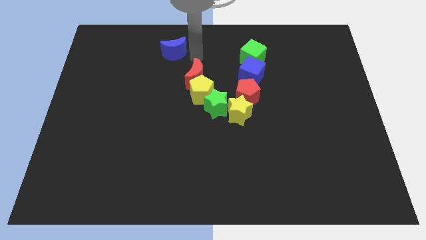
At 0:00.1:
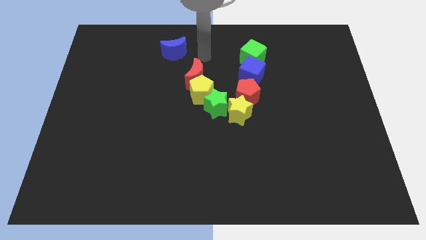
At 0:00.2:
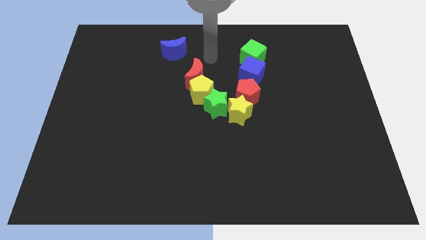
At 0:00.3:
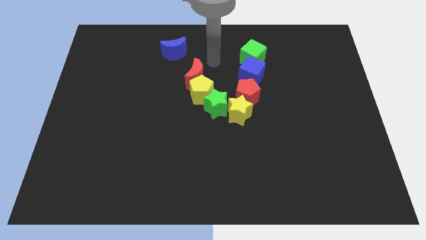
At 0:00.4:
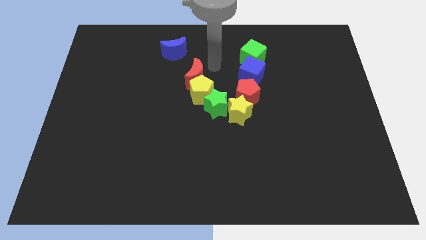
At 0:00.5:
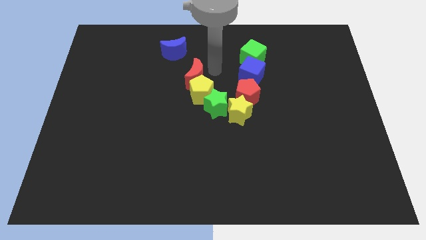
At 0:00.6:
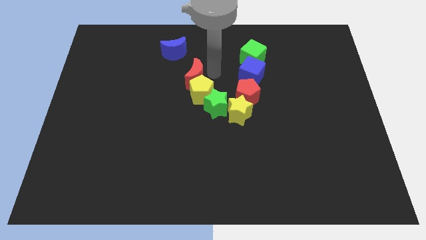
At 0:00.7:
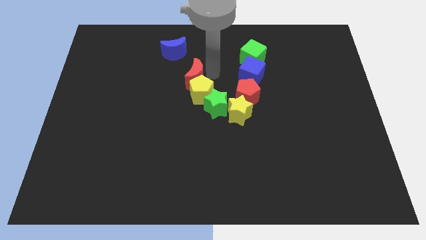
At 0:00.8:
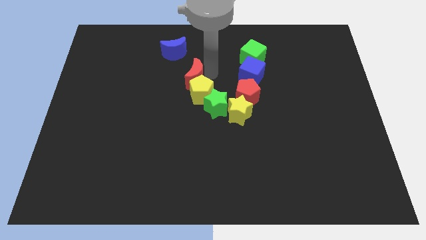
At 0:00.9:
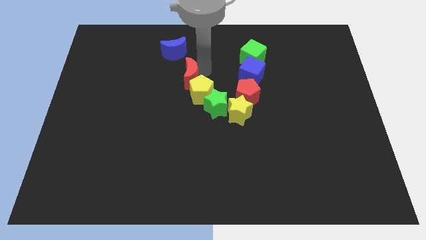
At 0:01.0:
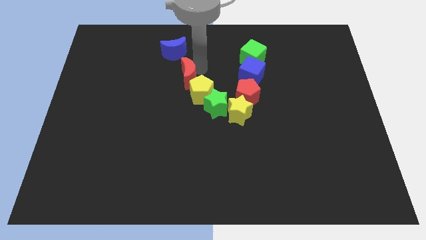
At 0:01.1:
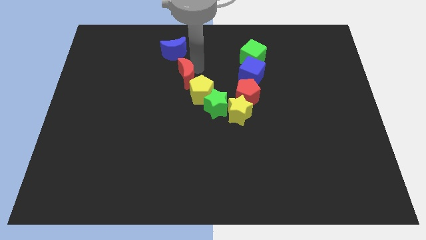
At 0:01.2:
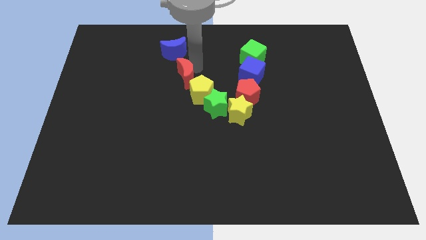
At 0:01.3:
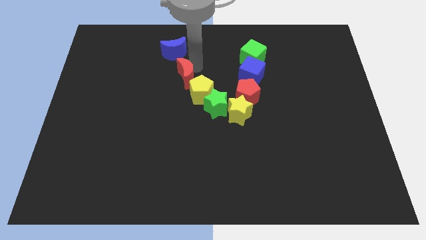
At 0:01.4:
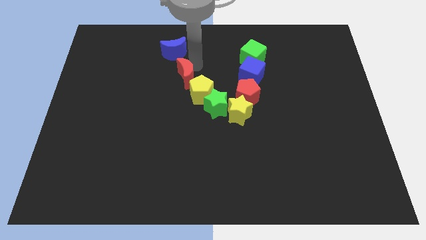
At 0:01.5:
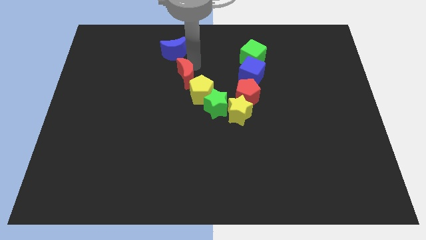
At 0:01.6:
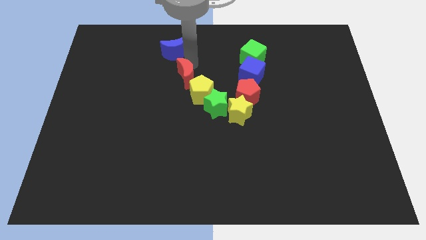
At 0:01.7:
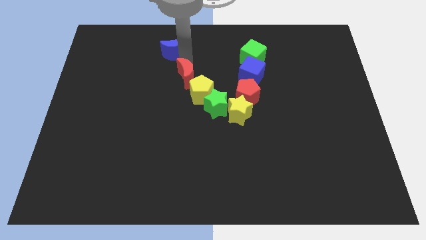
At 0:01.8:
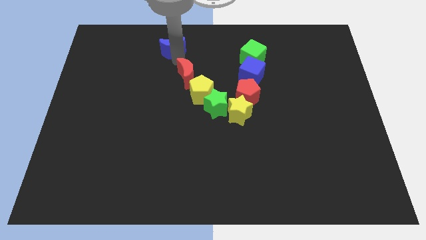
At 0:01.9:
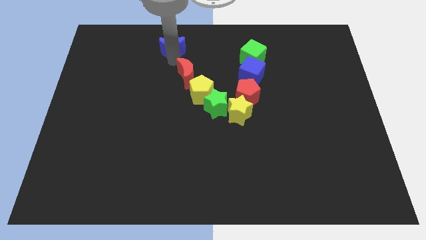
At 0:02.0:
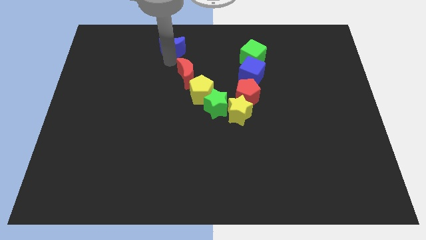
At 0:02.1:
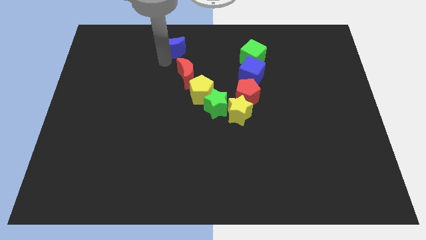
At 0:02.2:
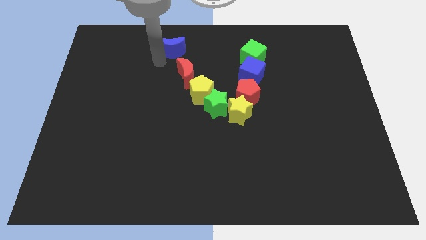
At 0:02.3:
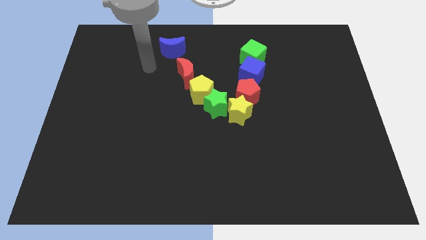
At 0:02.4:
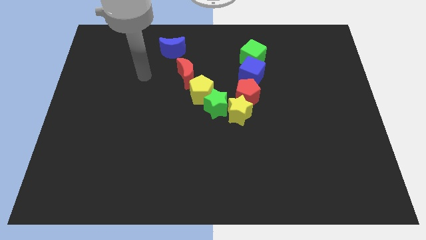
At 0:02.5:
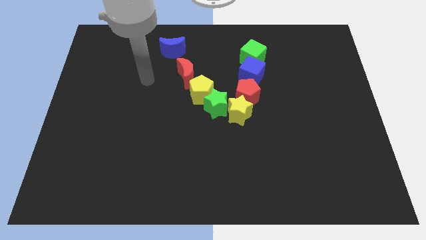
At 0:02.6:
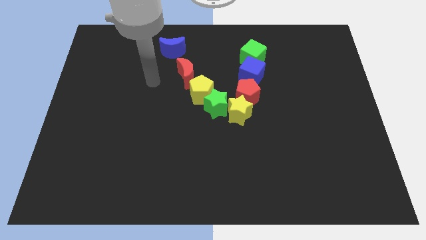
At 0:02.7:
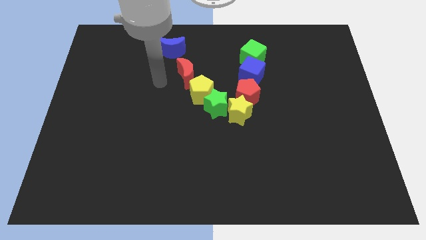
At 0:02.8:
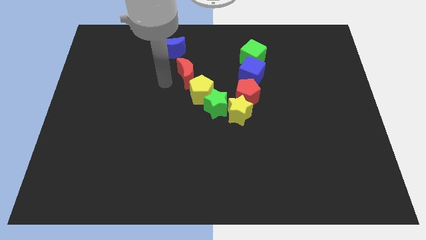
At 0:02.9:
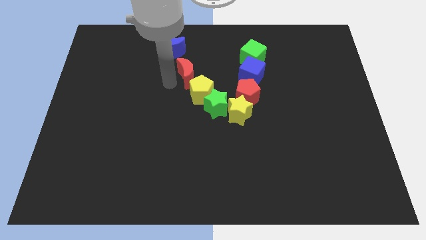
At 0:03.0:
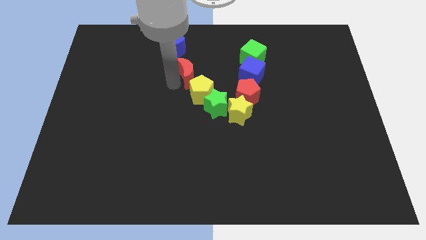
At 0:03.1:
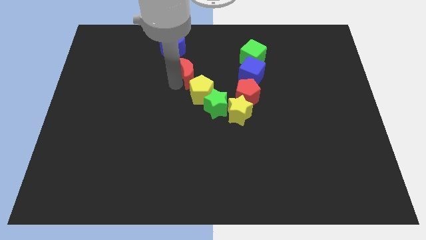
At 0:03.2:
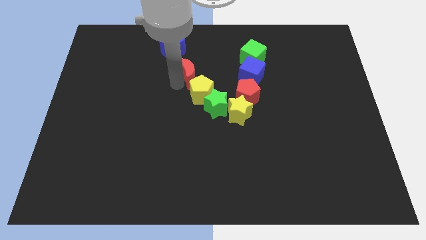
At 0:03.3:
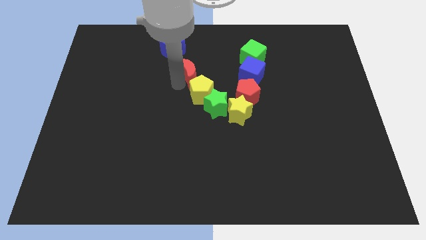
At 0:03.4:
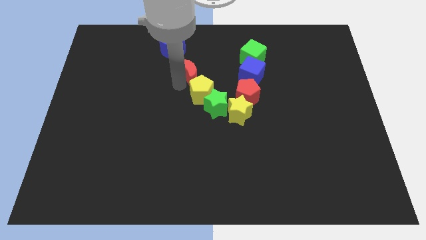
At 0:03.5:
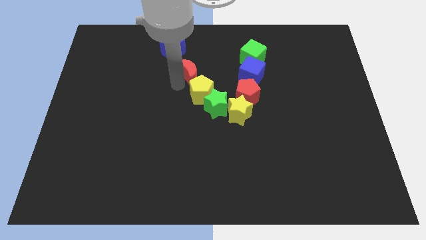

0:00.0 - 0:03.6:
adjust the red crescent at the top left side of the yellow pentagon

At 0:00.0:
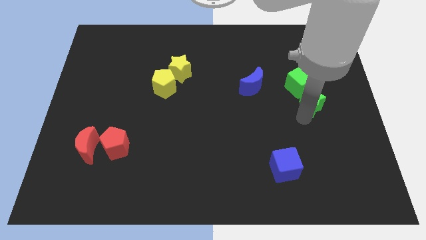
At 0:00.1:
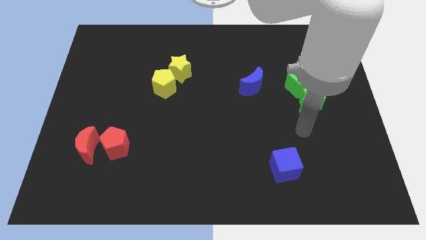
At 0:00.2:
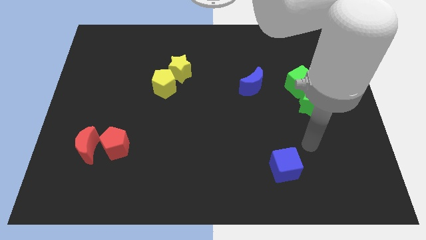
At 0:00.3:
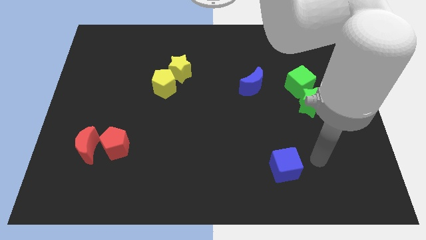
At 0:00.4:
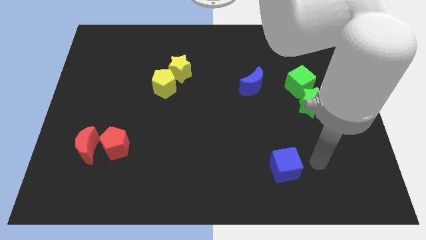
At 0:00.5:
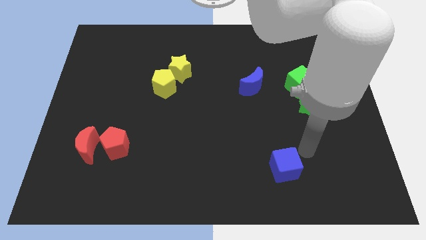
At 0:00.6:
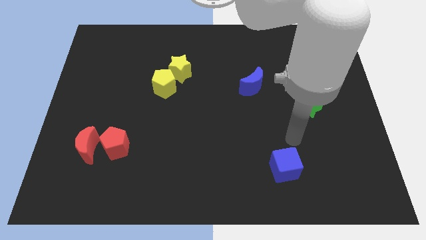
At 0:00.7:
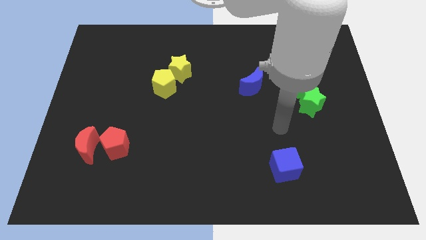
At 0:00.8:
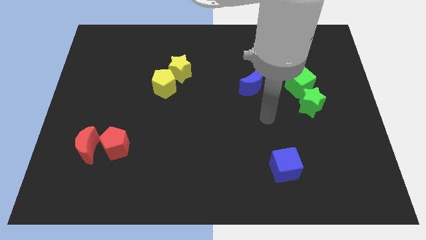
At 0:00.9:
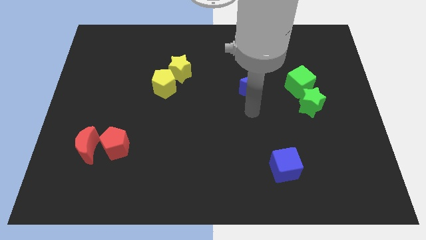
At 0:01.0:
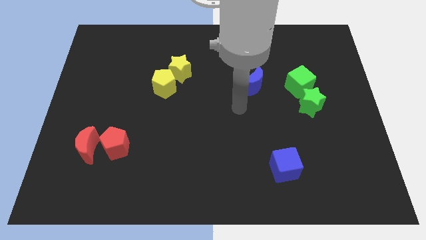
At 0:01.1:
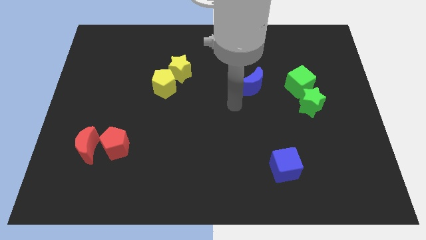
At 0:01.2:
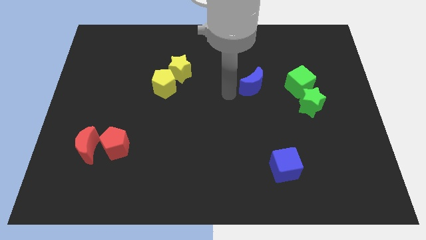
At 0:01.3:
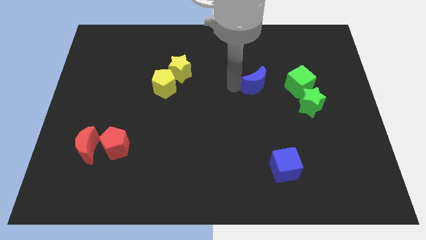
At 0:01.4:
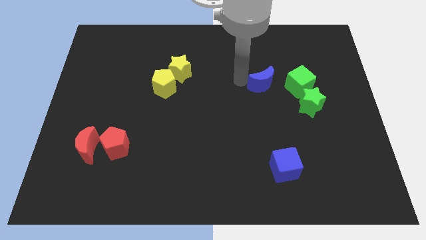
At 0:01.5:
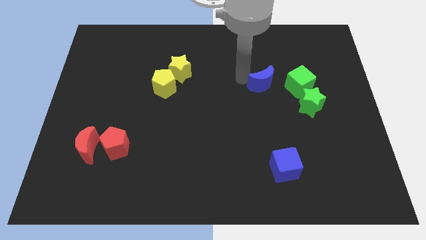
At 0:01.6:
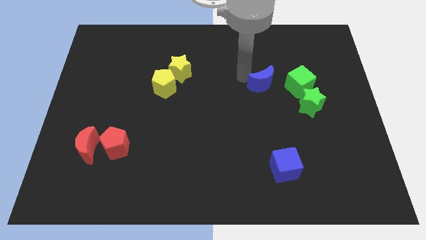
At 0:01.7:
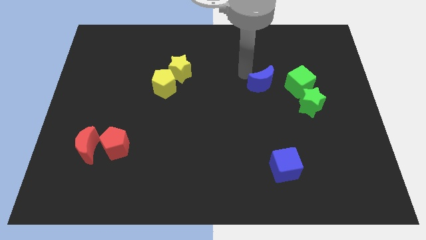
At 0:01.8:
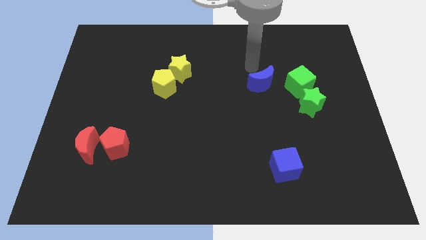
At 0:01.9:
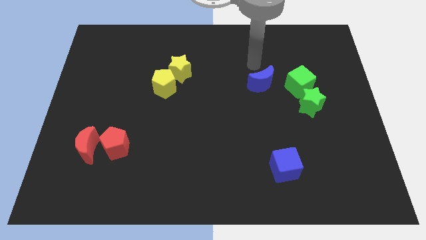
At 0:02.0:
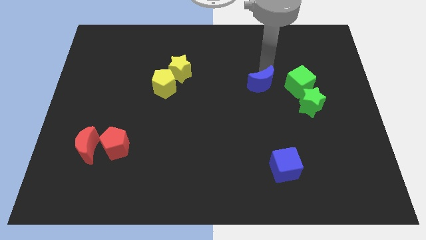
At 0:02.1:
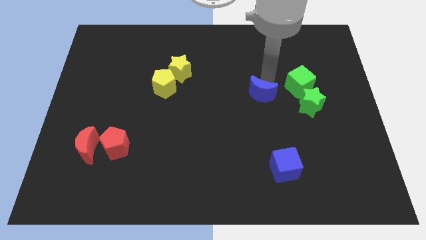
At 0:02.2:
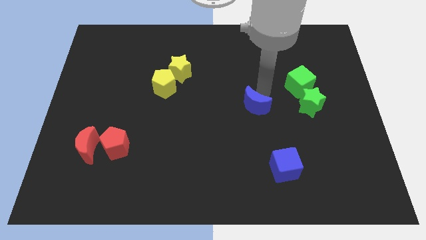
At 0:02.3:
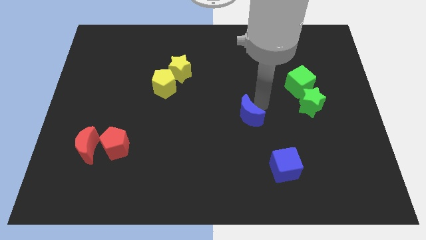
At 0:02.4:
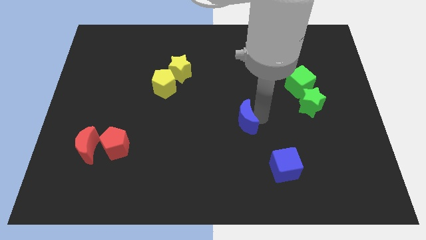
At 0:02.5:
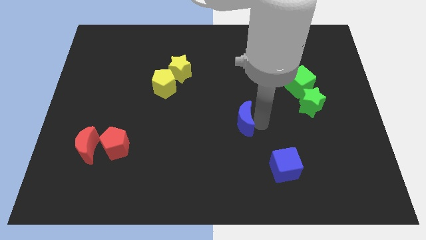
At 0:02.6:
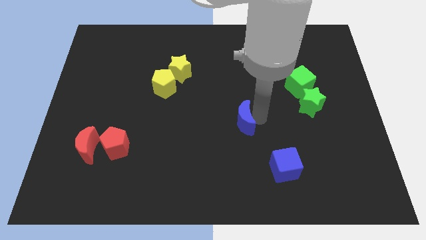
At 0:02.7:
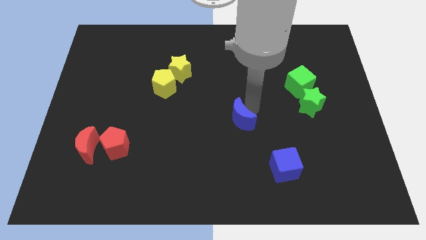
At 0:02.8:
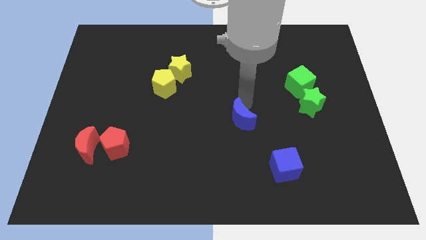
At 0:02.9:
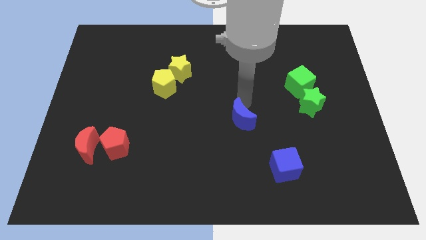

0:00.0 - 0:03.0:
slide the blue moon to the left of the green star

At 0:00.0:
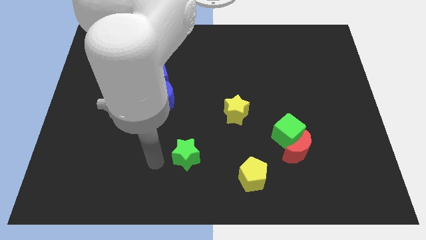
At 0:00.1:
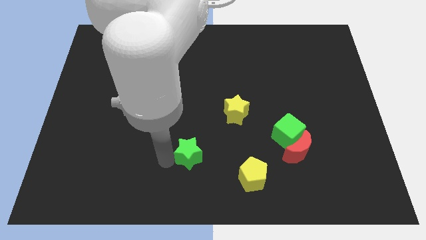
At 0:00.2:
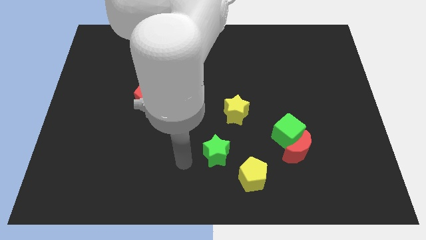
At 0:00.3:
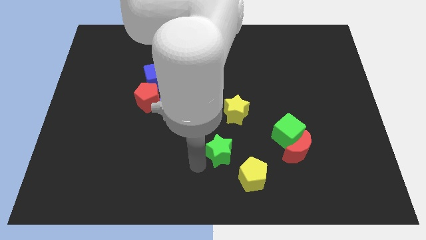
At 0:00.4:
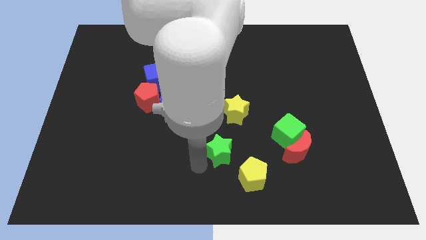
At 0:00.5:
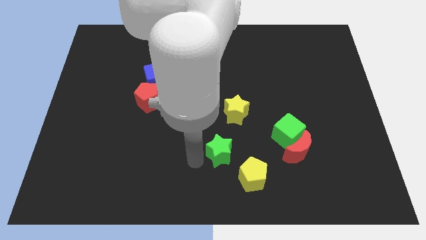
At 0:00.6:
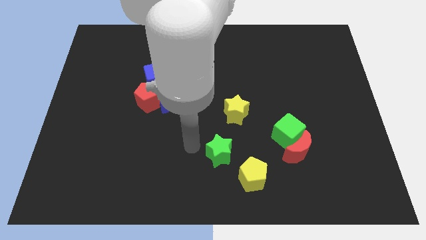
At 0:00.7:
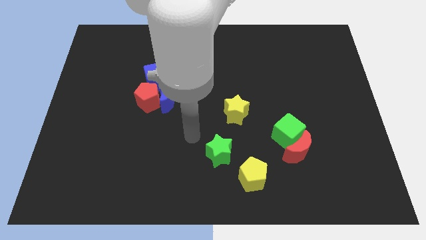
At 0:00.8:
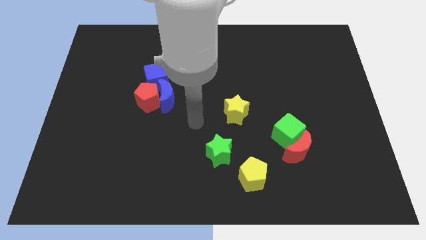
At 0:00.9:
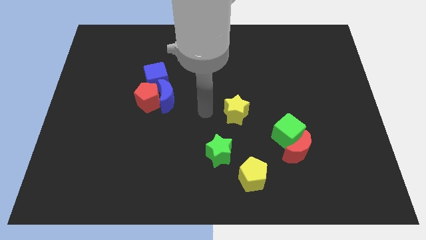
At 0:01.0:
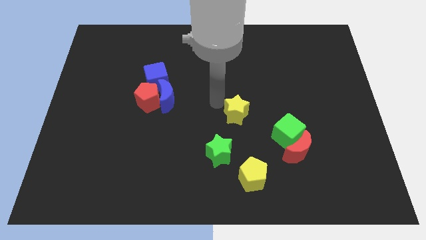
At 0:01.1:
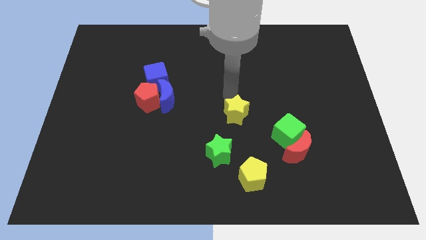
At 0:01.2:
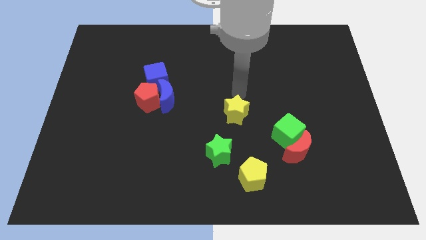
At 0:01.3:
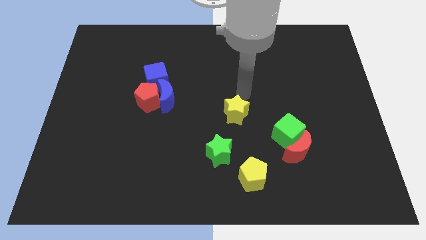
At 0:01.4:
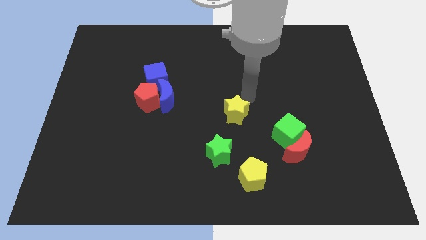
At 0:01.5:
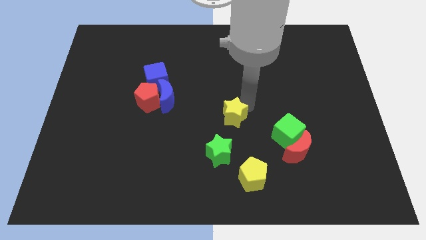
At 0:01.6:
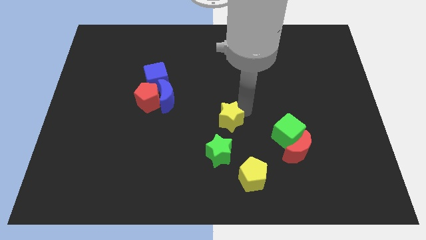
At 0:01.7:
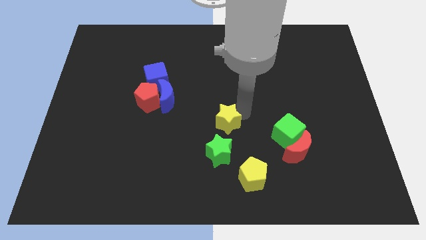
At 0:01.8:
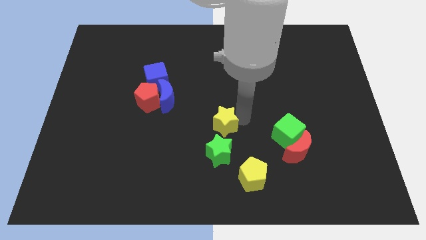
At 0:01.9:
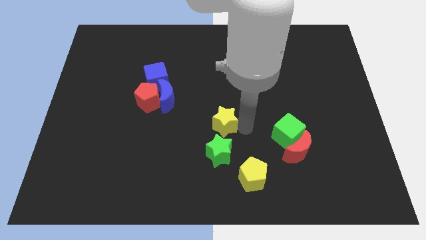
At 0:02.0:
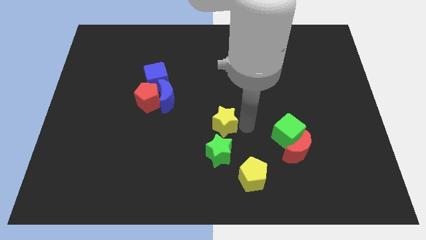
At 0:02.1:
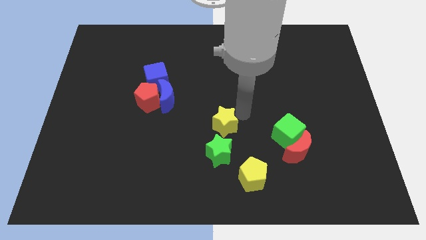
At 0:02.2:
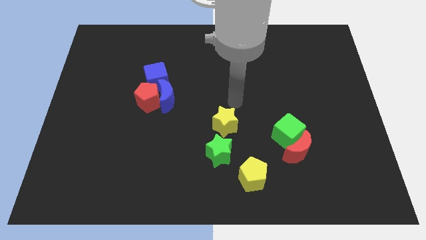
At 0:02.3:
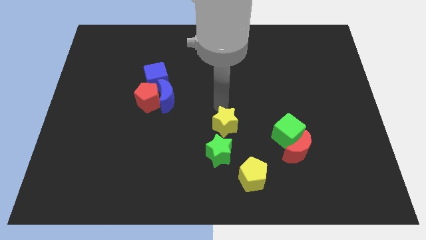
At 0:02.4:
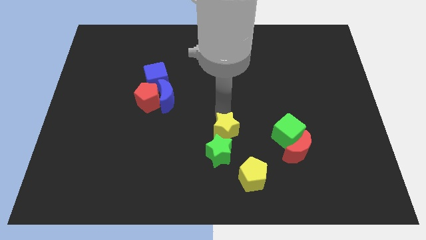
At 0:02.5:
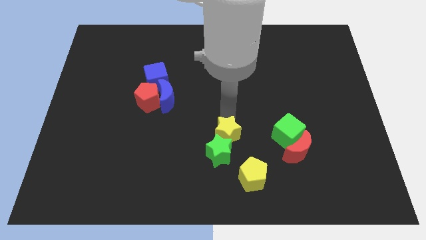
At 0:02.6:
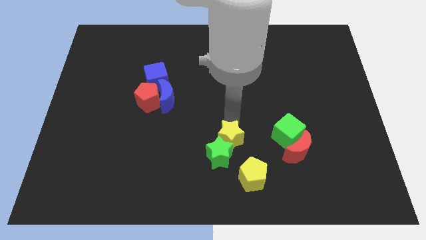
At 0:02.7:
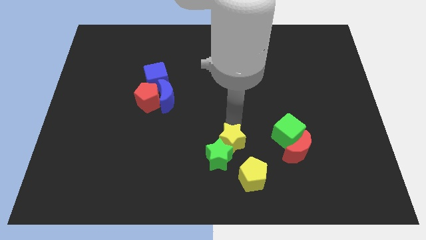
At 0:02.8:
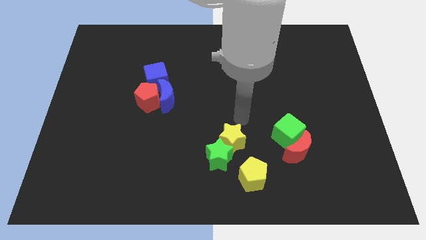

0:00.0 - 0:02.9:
bring both the stars close to each other
